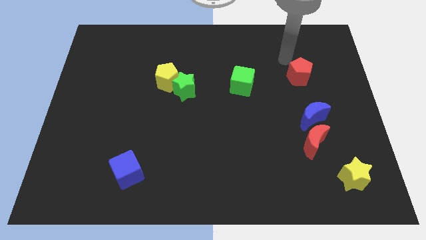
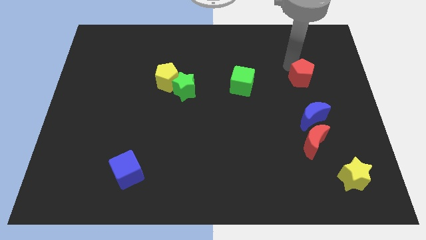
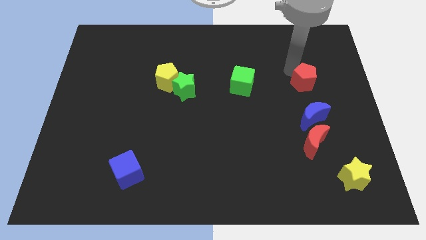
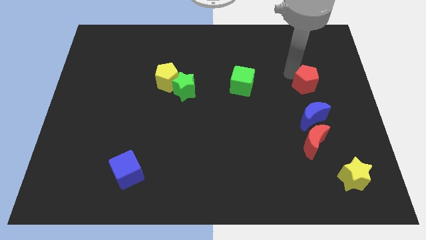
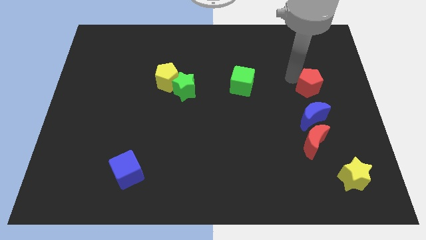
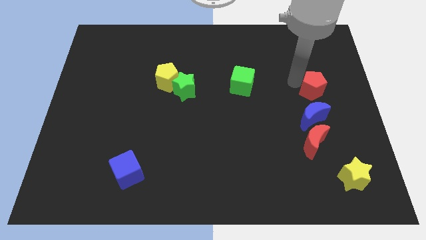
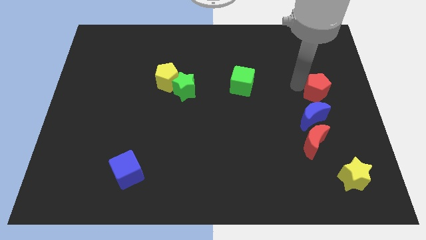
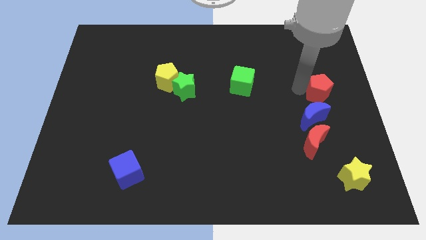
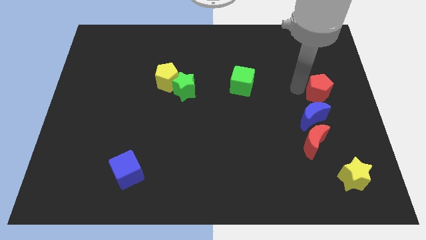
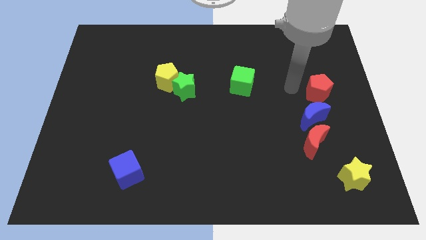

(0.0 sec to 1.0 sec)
move the red pentagon above the blue crescent

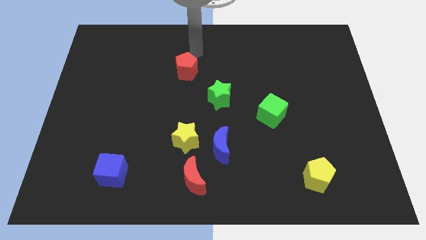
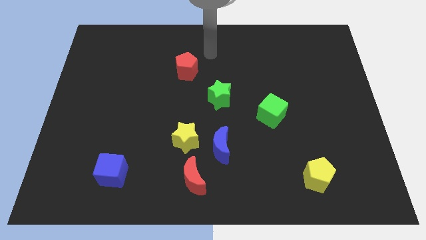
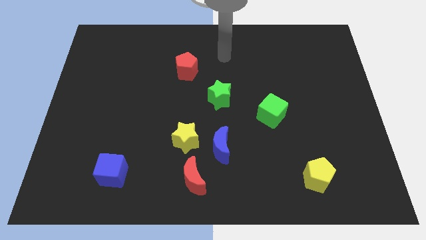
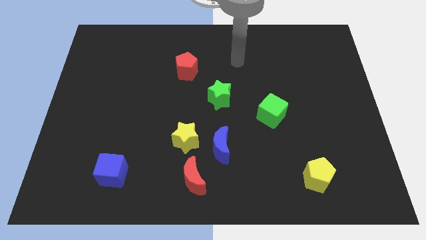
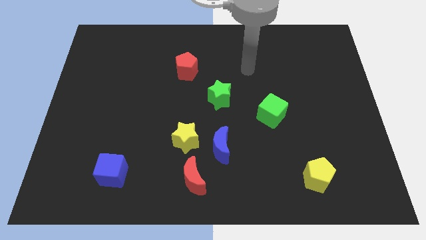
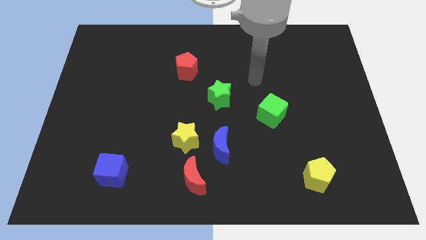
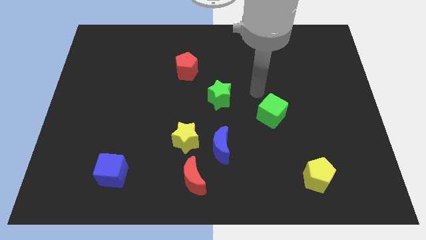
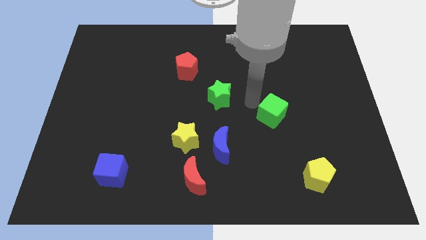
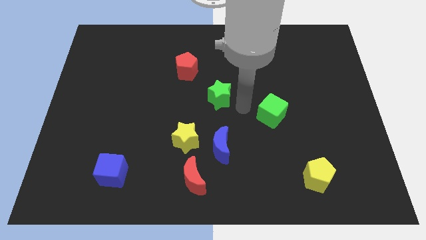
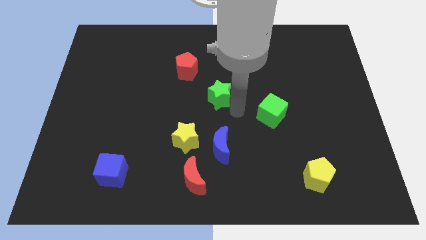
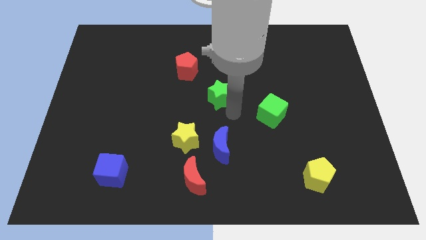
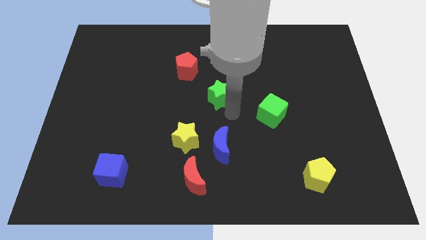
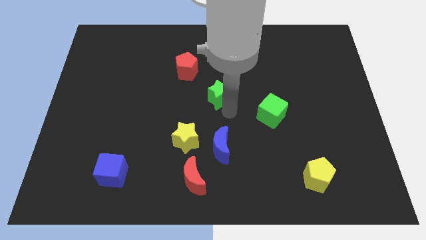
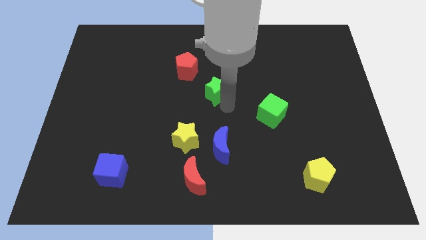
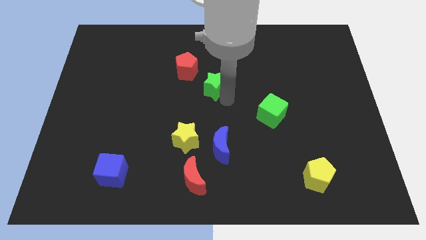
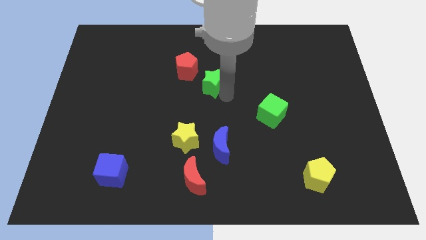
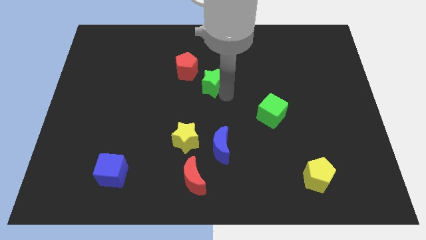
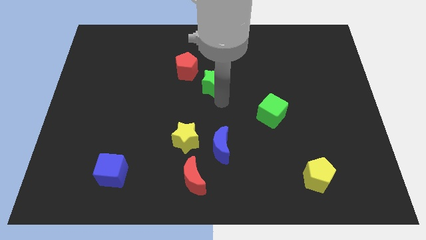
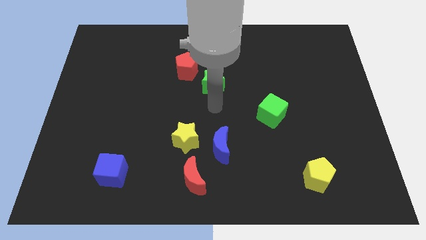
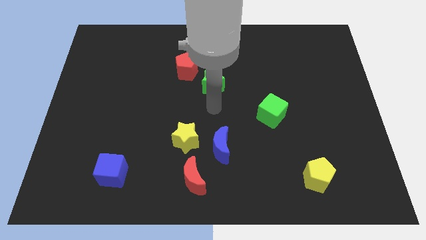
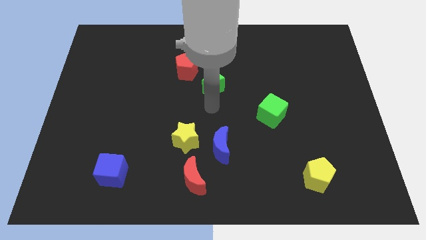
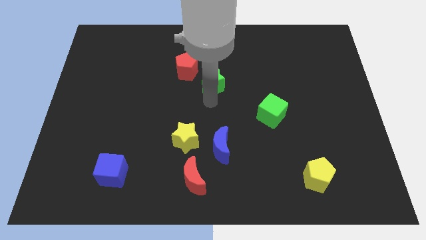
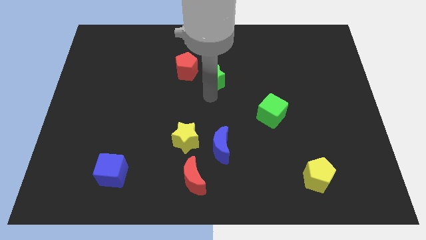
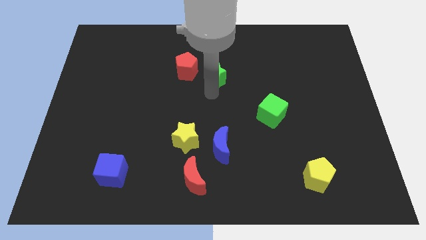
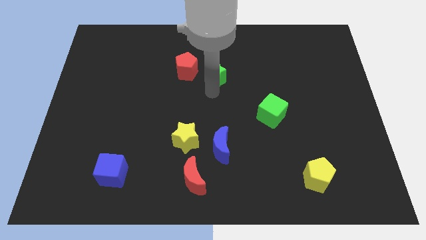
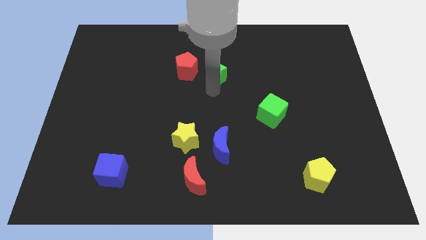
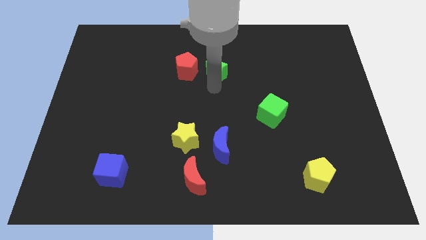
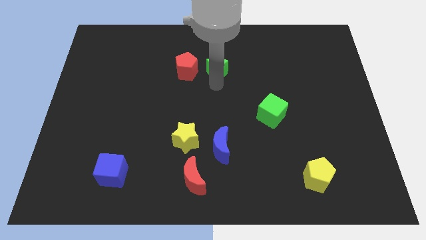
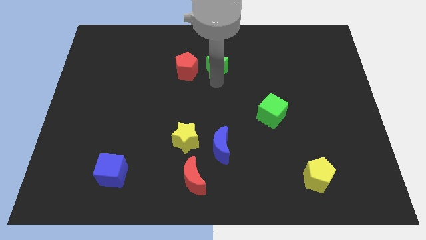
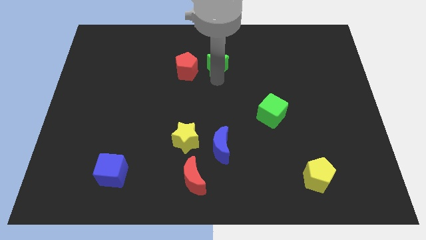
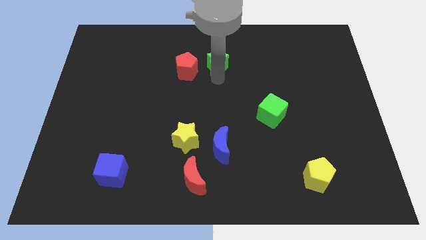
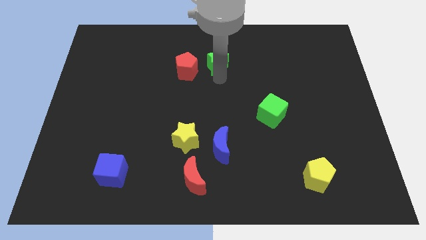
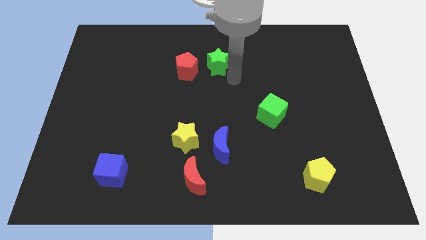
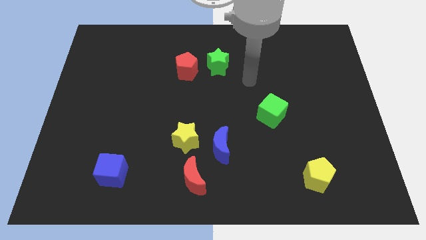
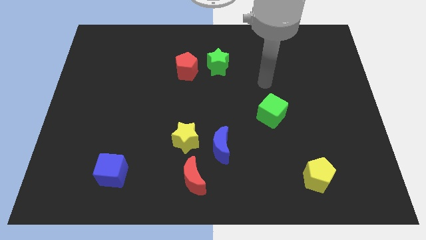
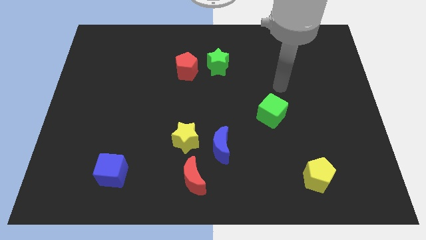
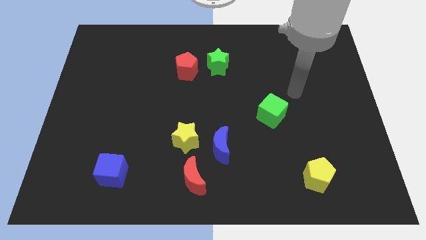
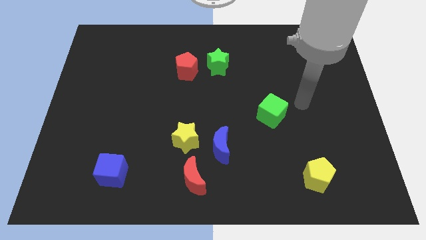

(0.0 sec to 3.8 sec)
move the green star to the right of red pentagon

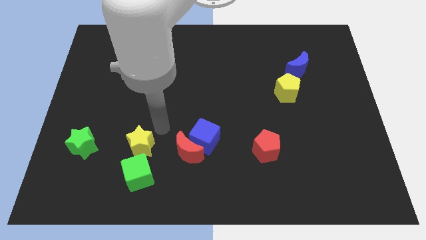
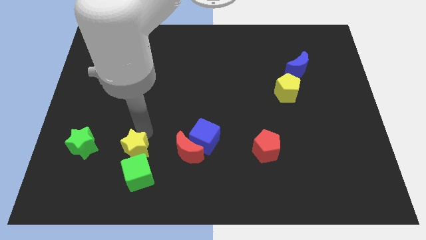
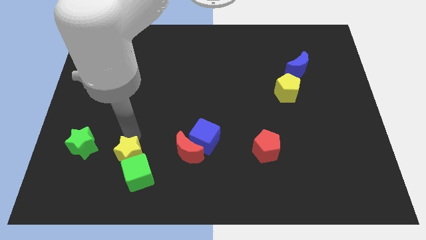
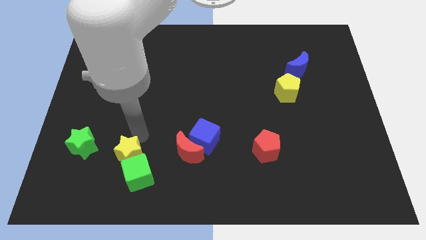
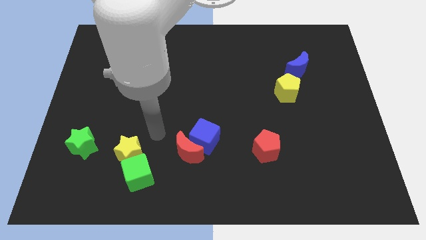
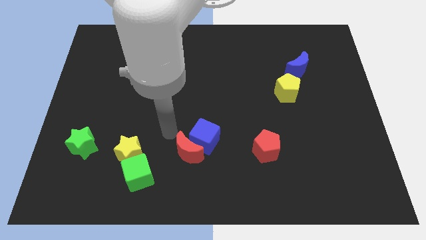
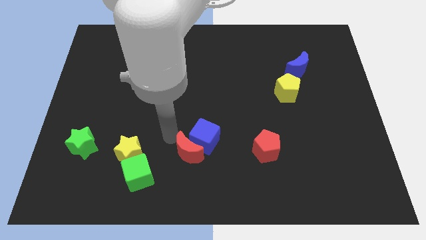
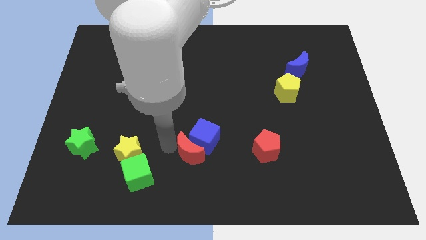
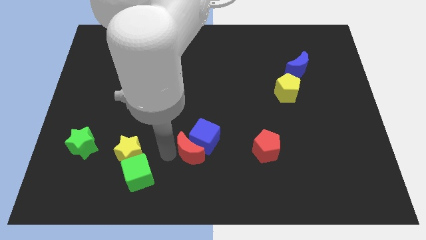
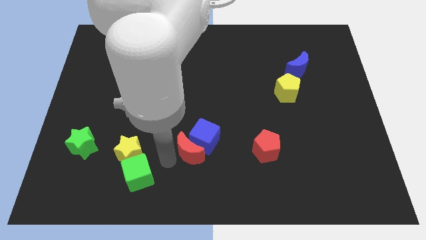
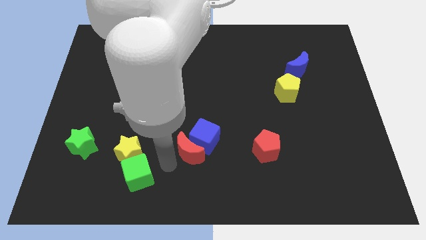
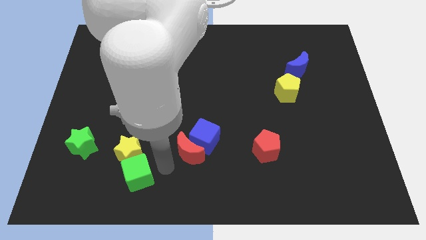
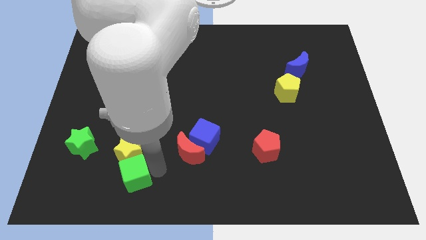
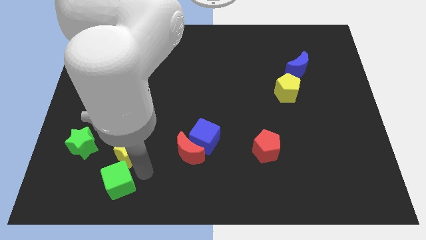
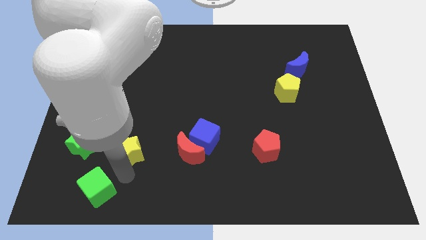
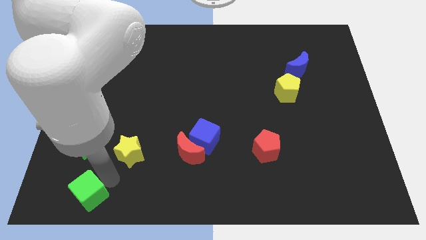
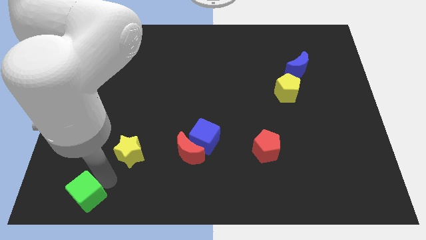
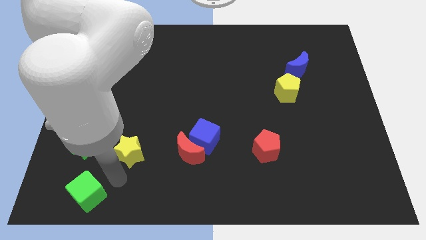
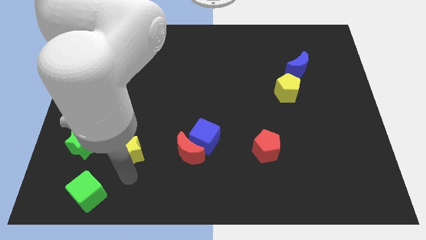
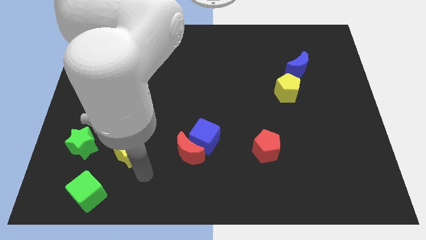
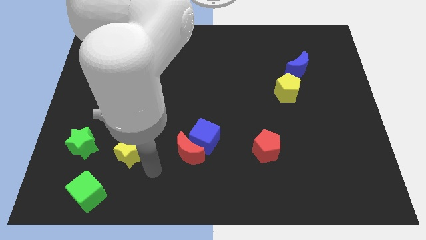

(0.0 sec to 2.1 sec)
push the green star to the bottom left

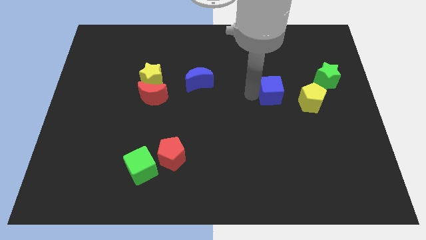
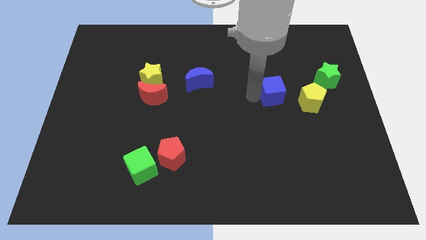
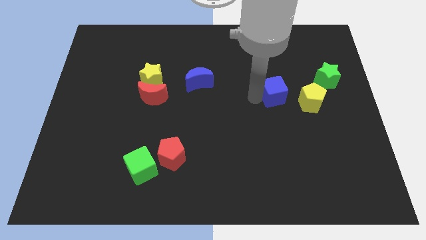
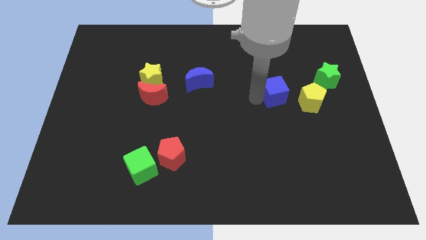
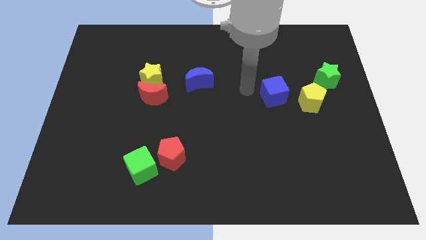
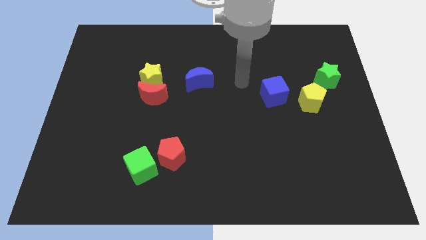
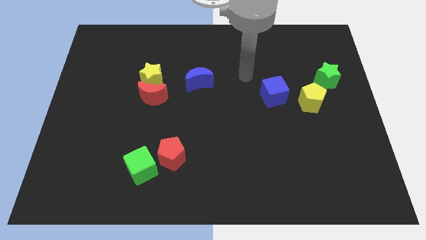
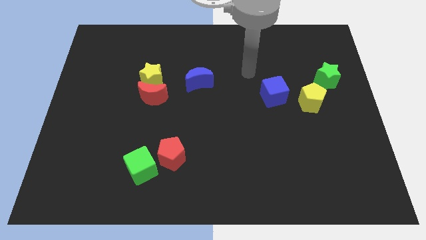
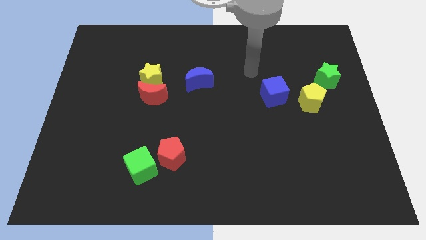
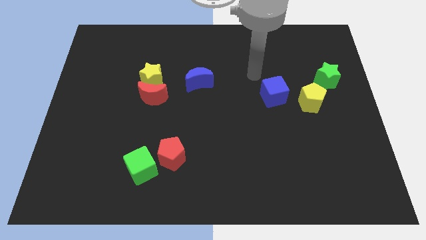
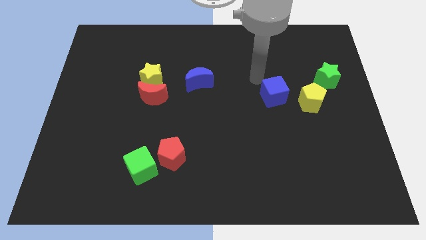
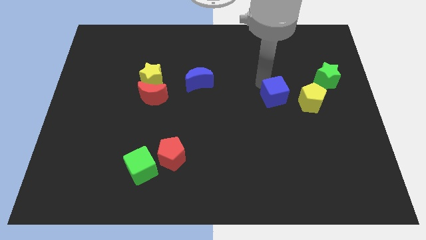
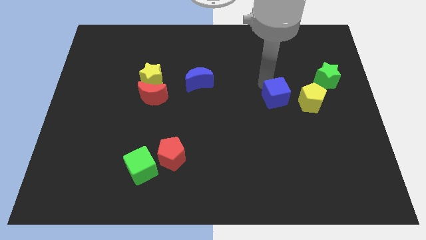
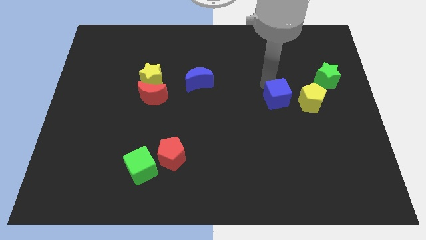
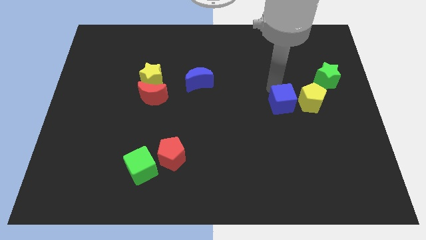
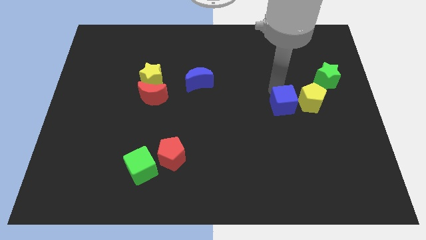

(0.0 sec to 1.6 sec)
place the blue cube close to the yellow pentagon

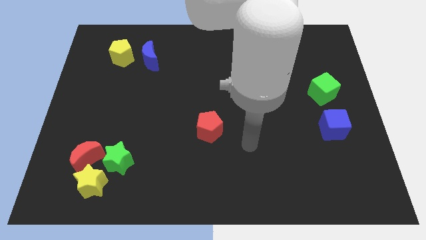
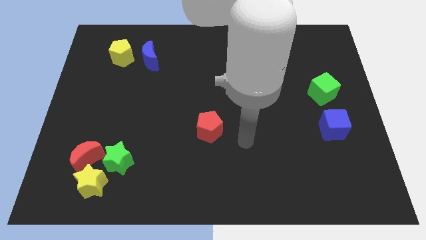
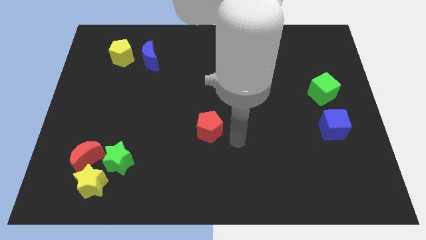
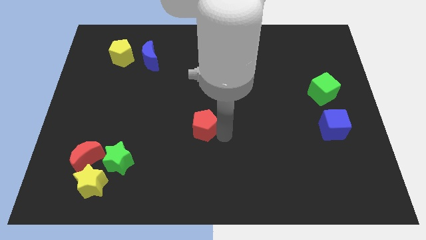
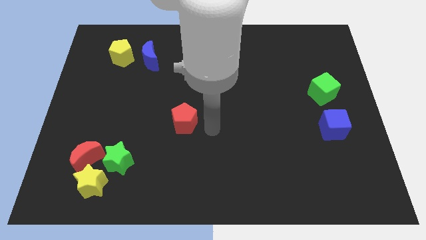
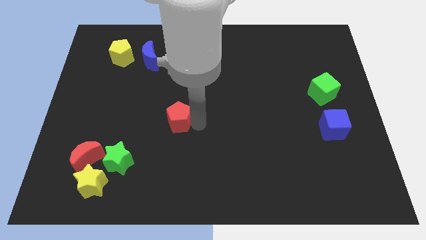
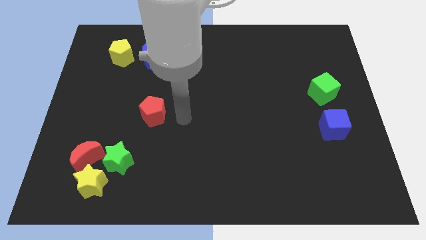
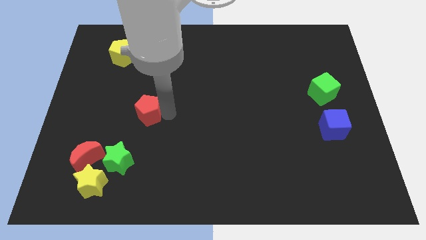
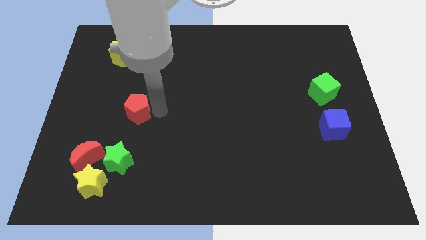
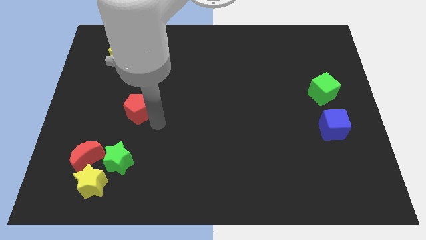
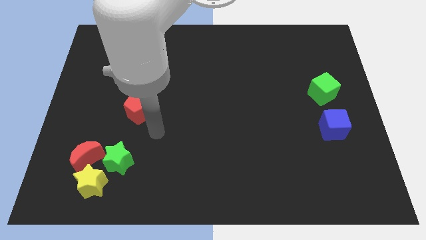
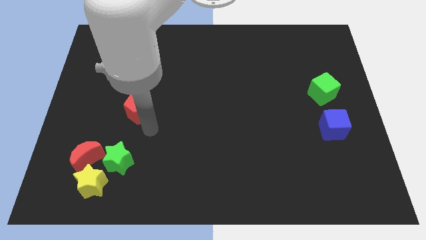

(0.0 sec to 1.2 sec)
hit the red pentagon
